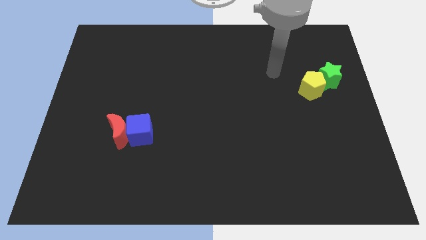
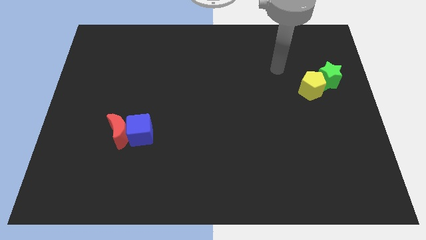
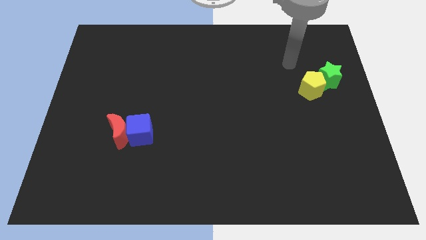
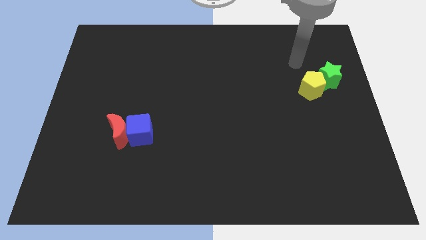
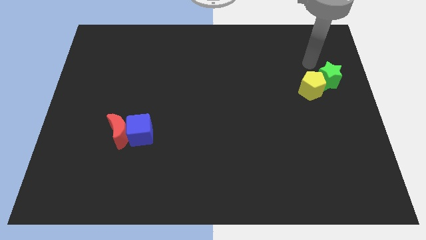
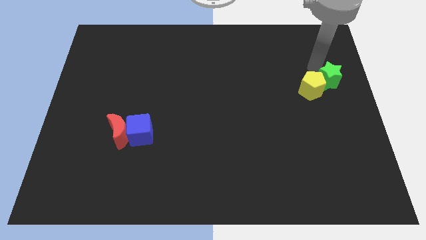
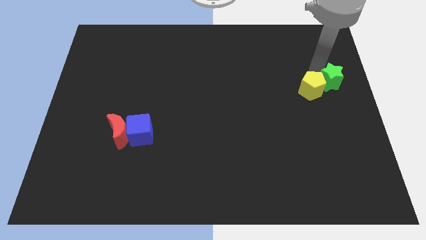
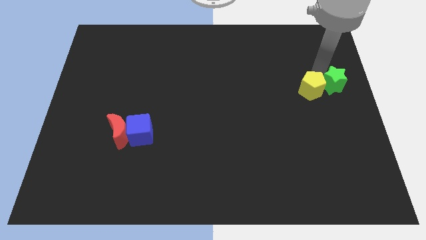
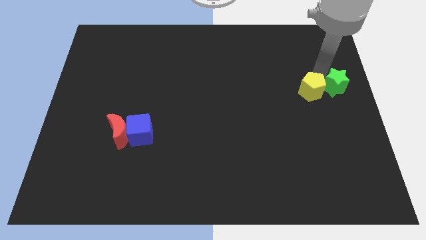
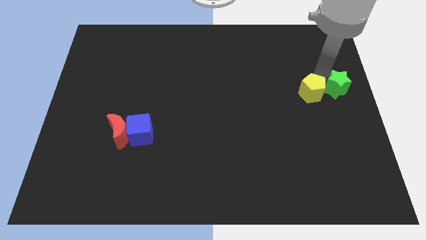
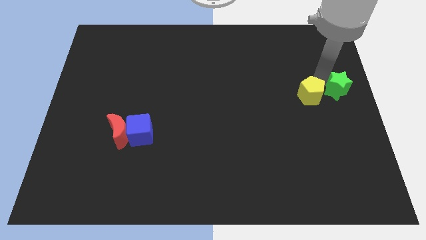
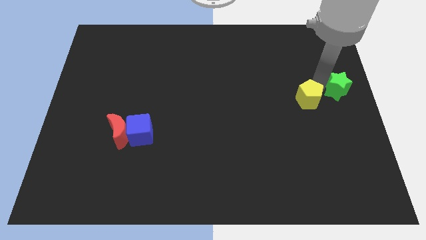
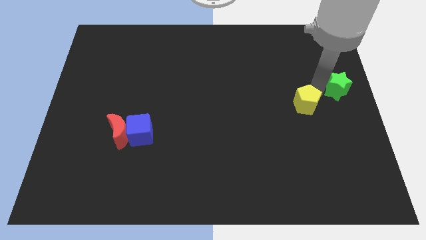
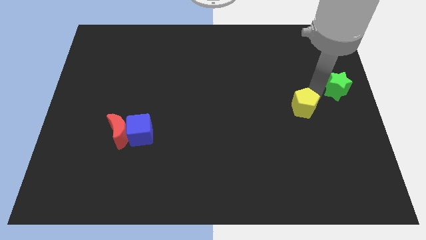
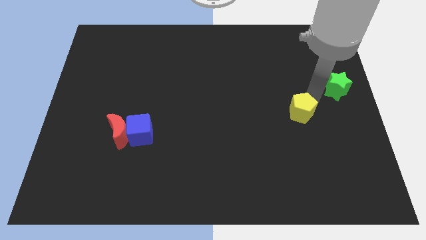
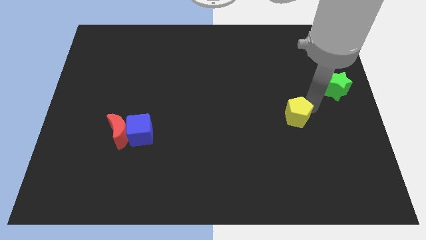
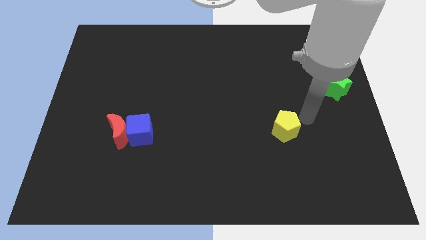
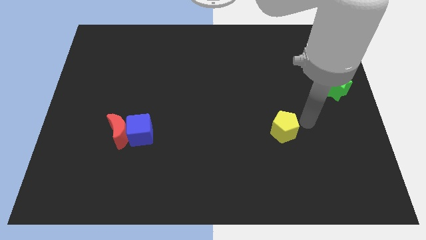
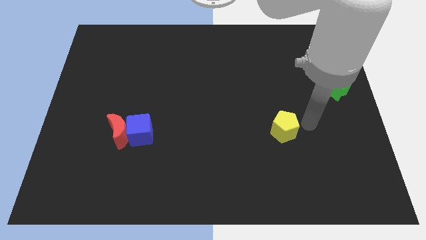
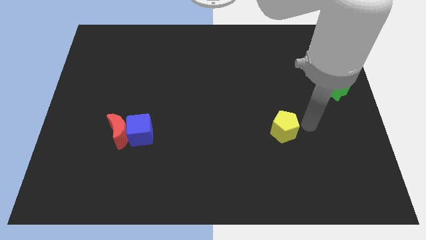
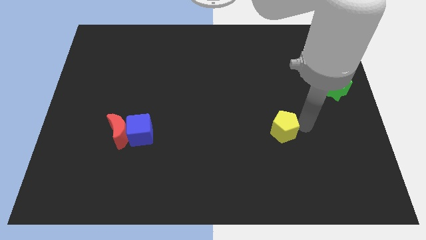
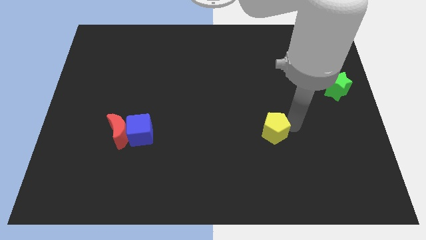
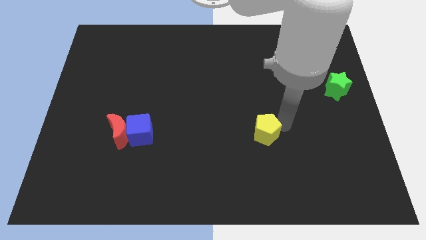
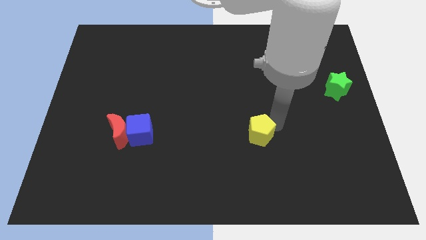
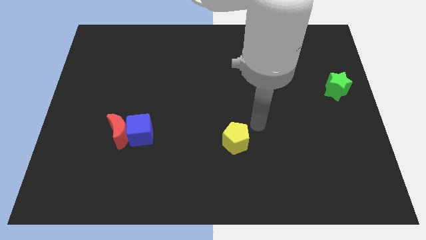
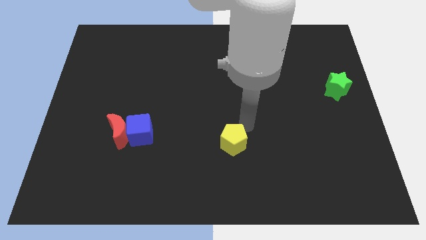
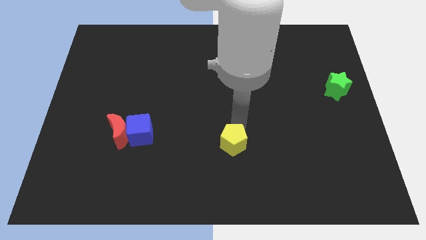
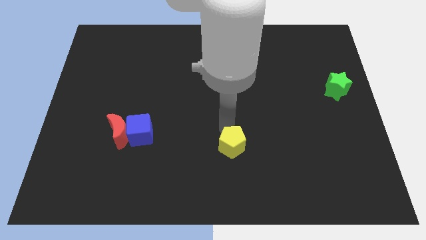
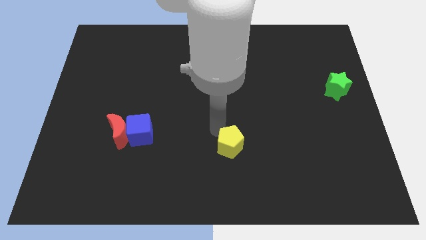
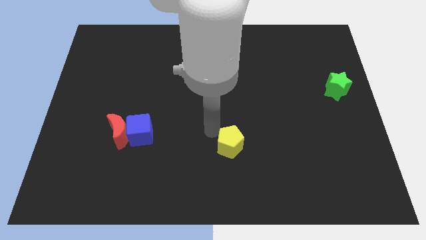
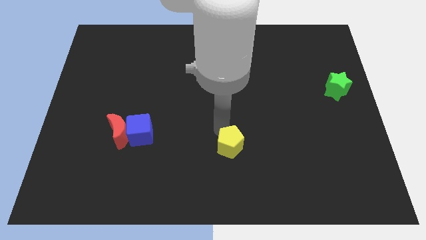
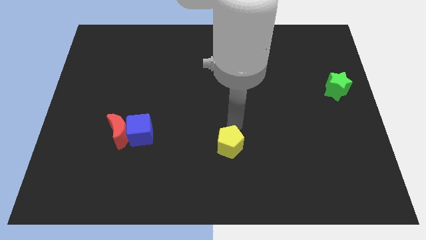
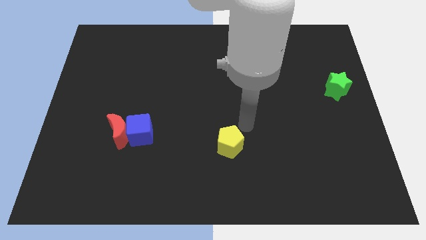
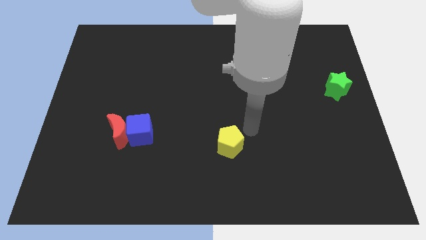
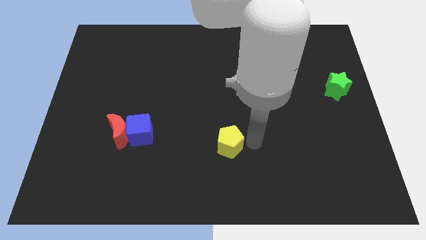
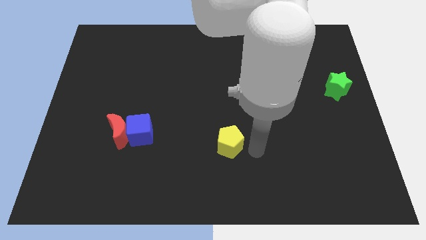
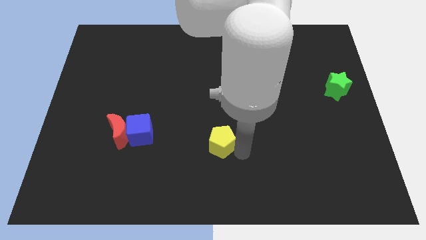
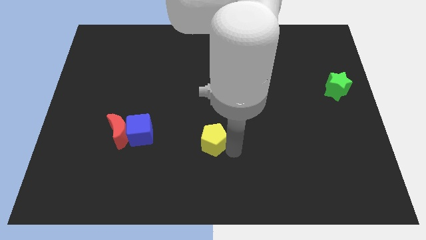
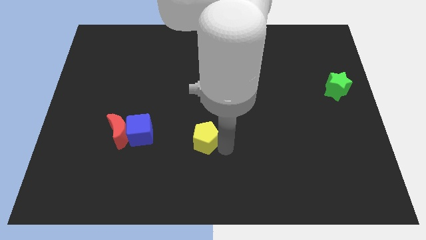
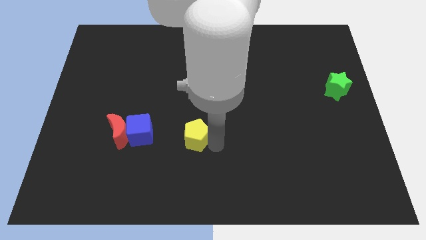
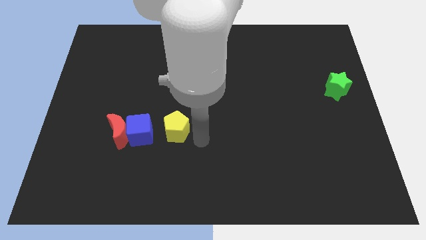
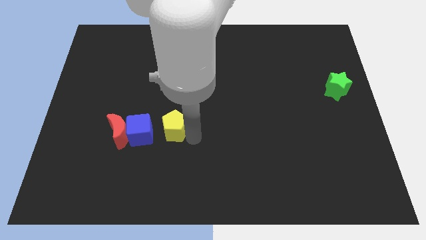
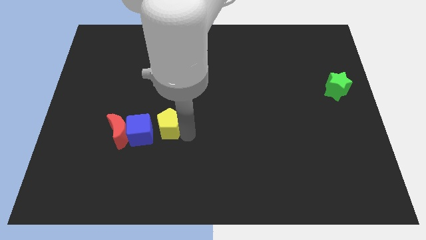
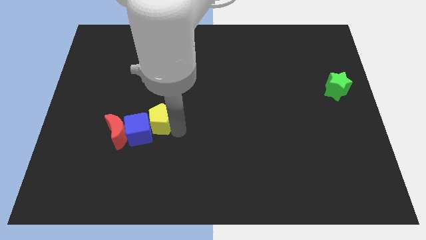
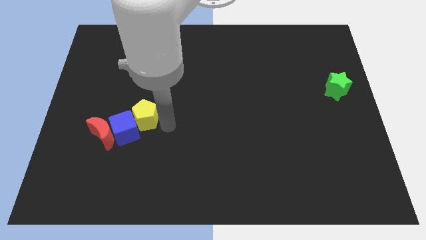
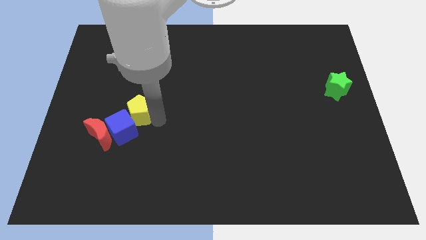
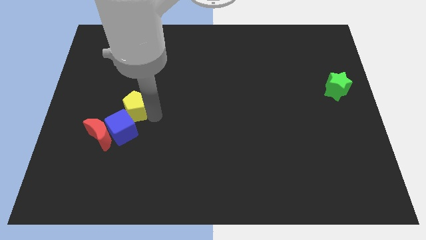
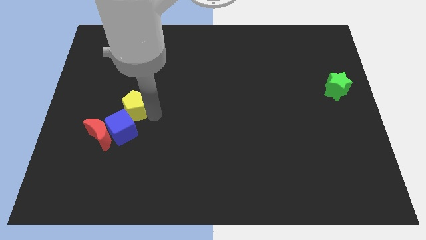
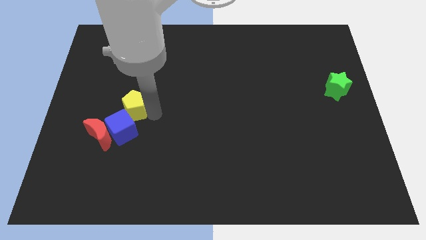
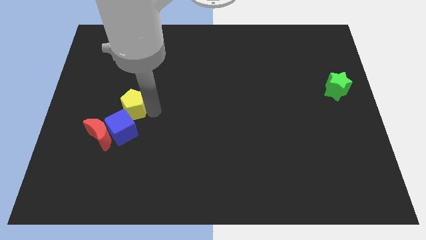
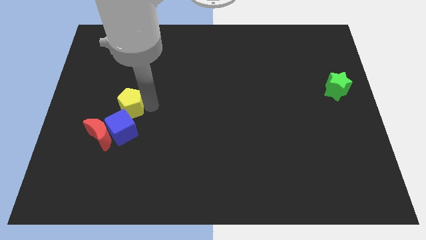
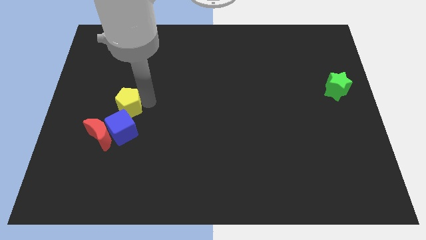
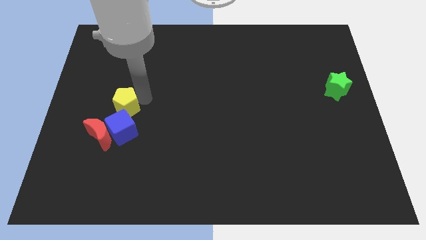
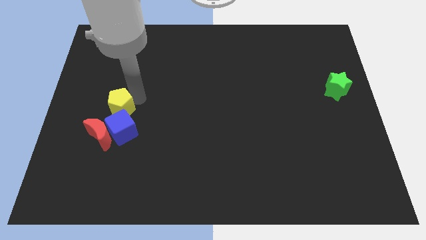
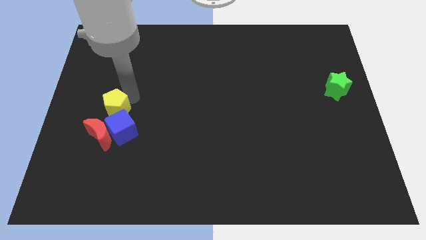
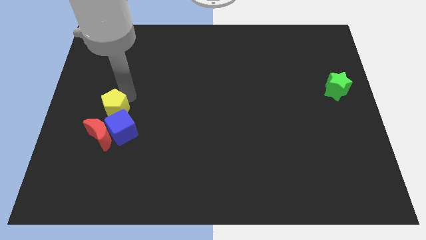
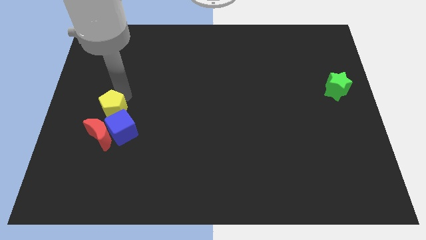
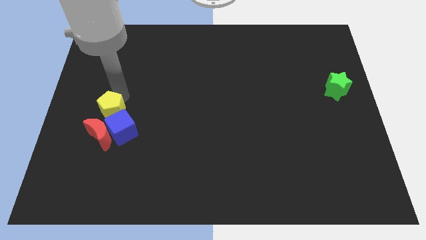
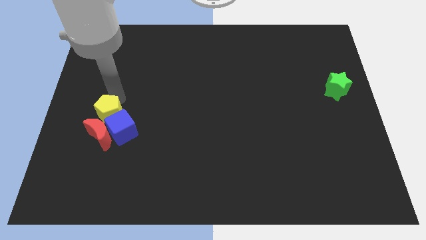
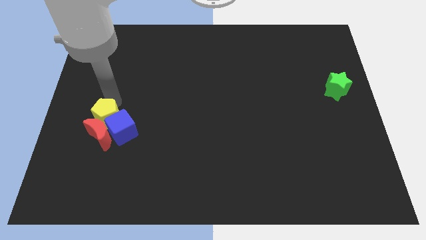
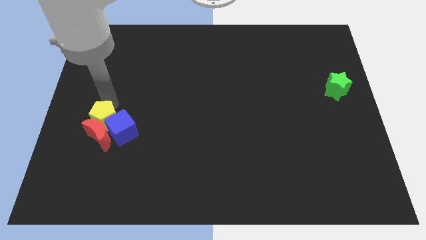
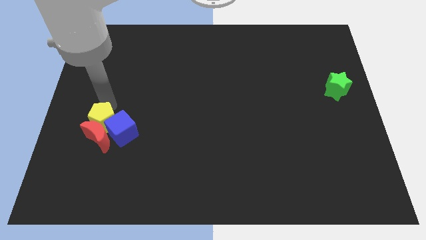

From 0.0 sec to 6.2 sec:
push the yellow block to the moon

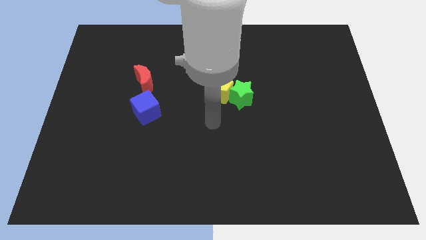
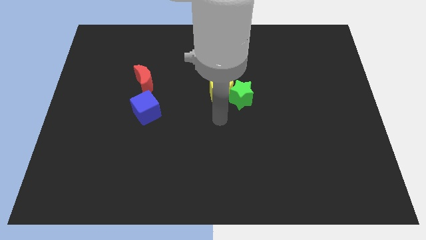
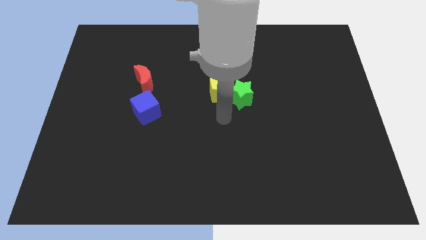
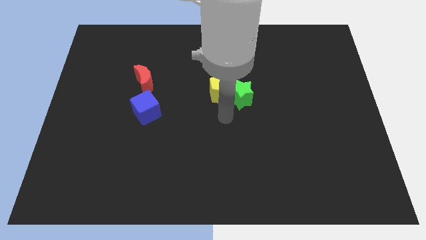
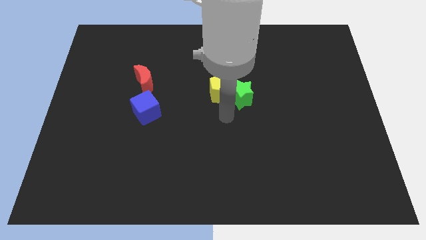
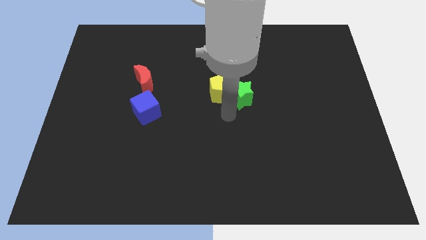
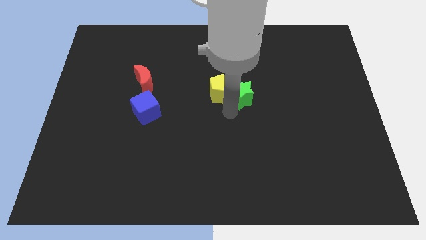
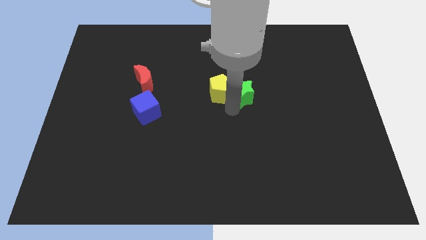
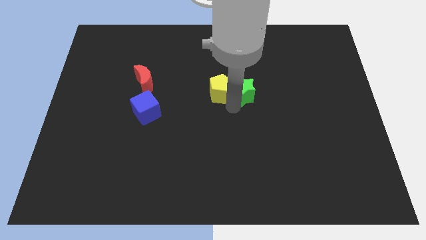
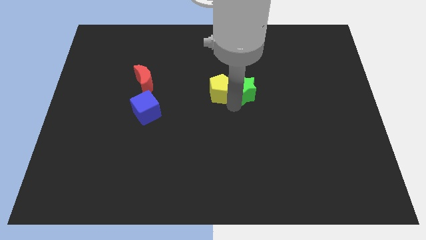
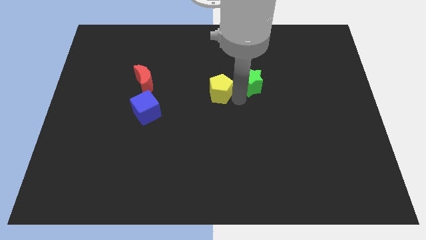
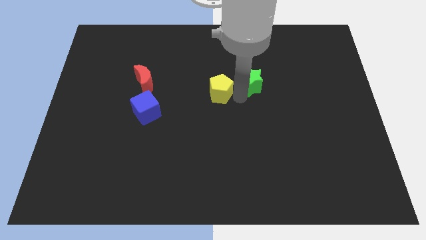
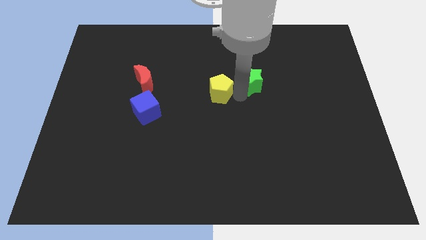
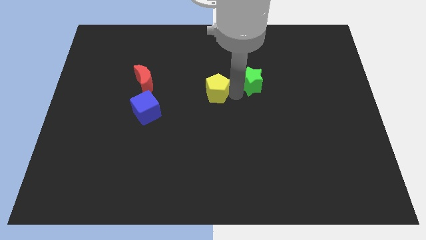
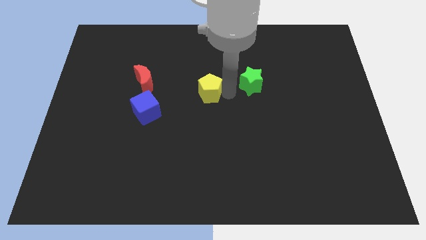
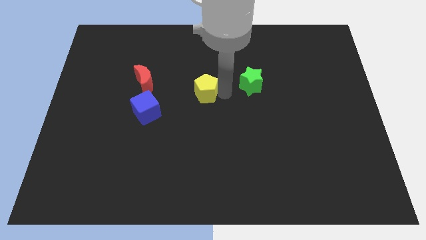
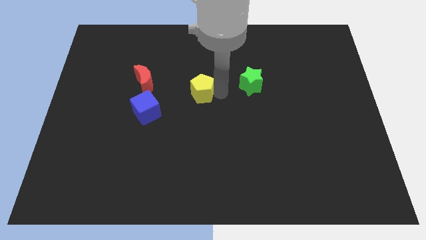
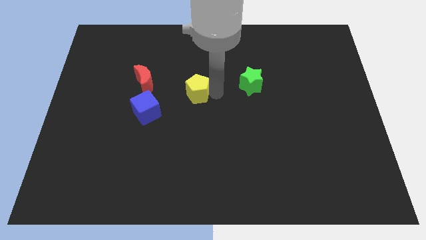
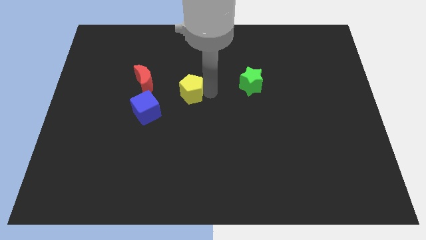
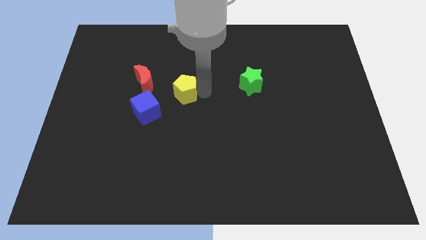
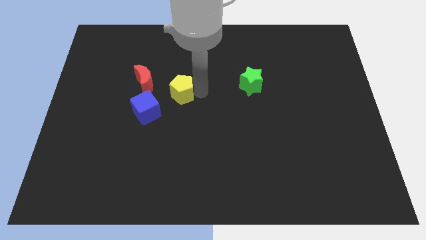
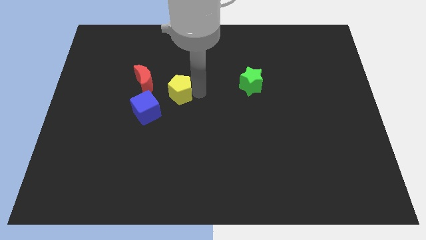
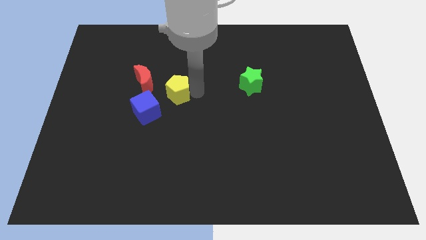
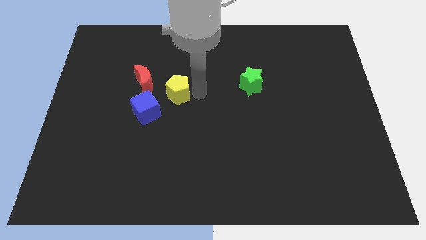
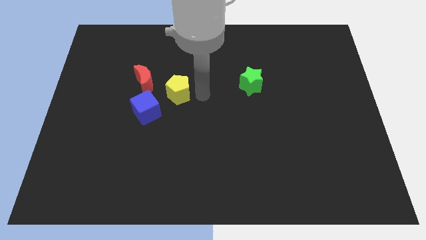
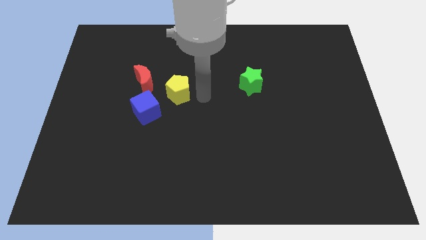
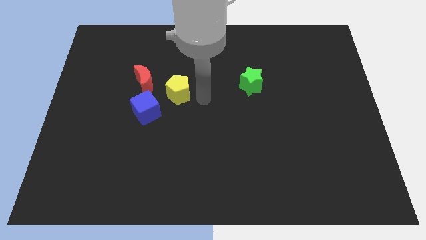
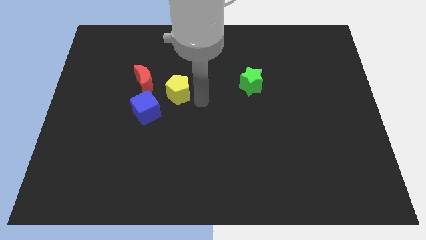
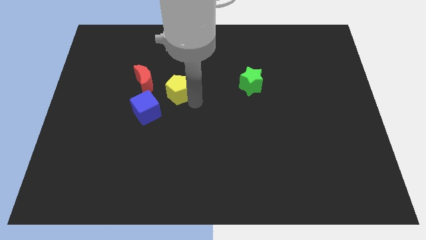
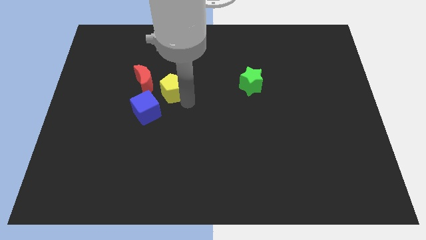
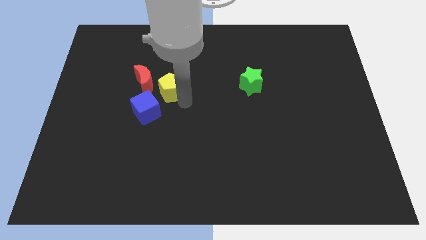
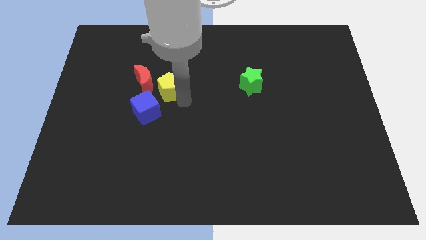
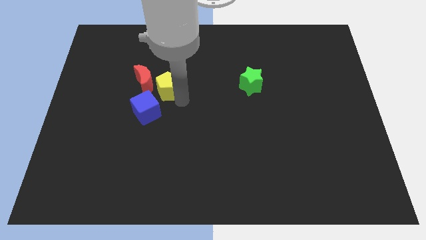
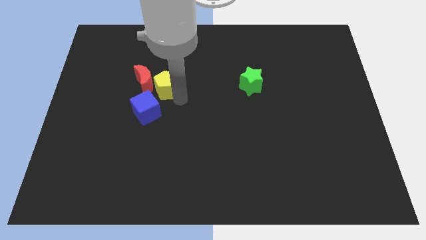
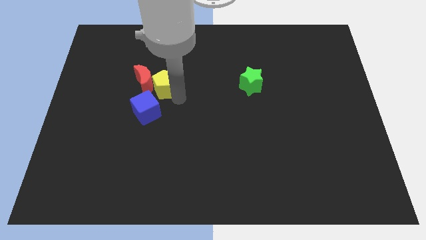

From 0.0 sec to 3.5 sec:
slide the yellow block to the moon
